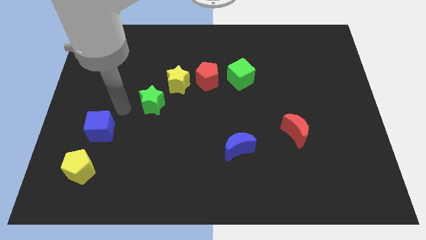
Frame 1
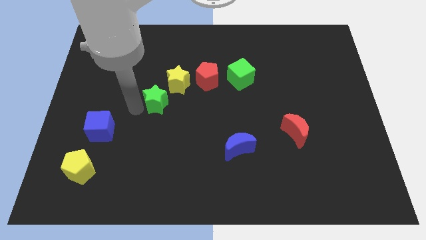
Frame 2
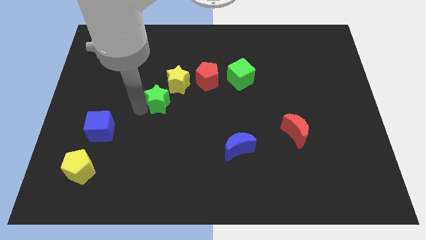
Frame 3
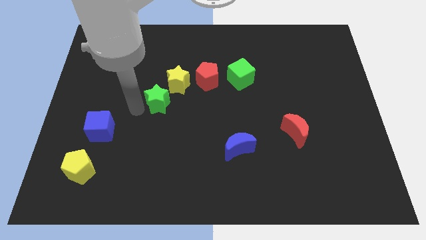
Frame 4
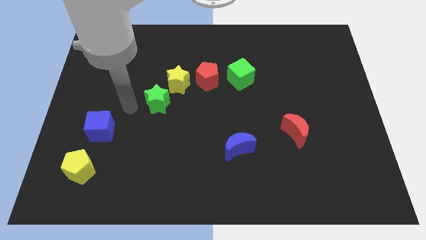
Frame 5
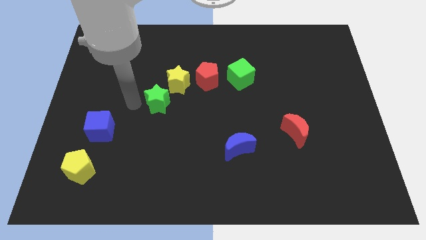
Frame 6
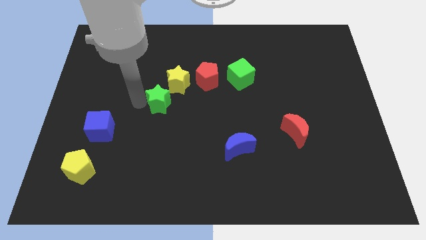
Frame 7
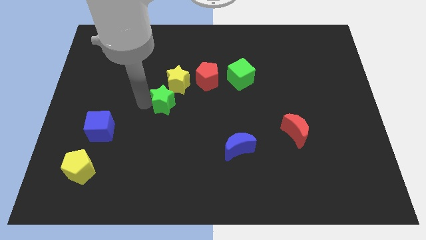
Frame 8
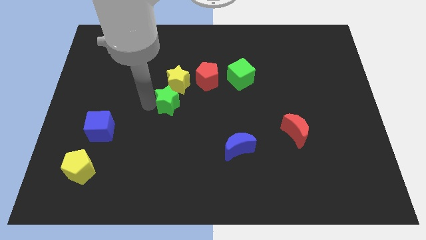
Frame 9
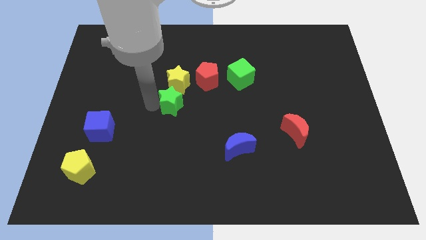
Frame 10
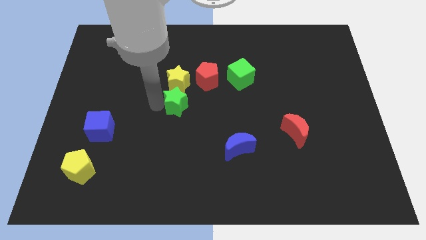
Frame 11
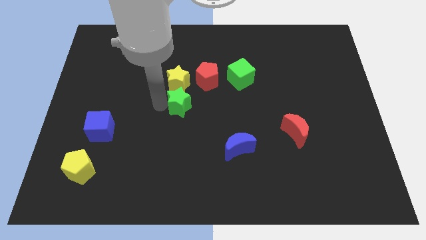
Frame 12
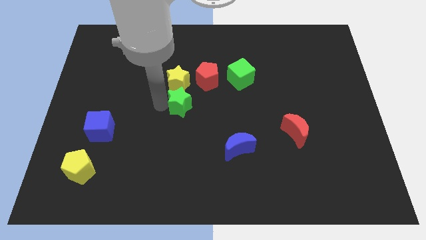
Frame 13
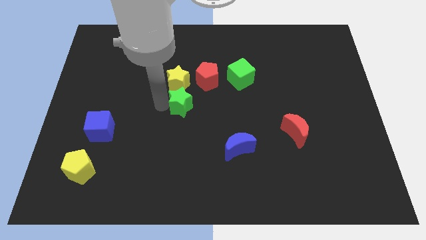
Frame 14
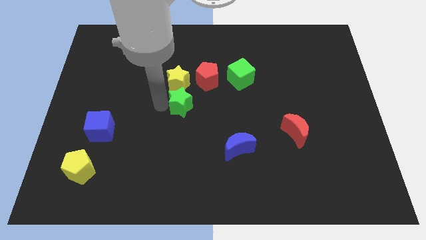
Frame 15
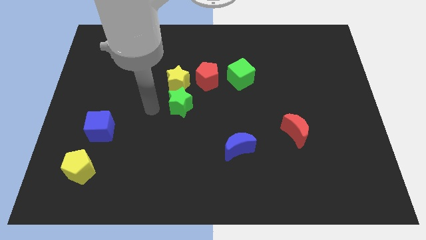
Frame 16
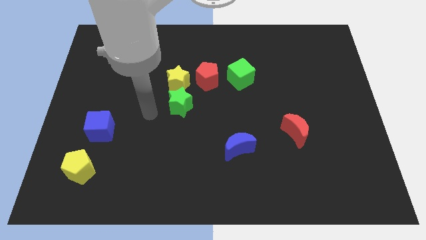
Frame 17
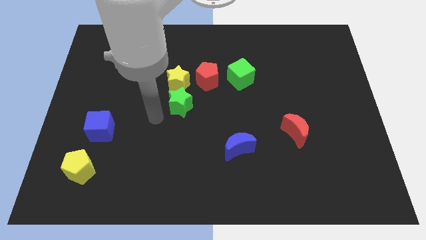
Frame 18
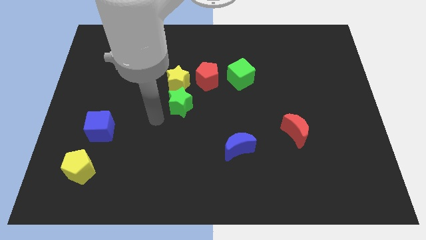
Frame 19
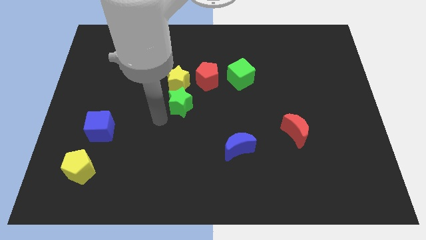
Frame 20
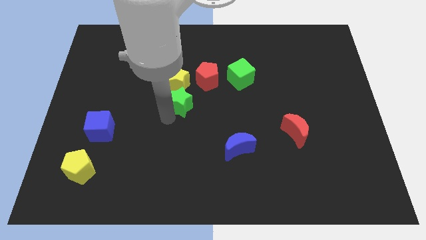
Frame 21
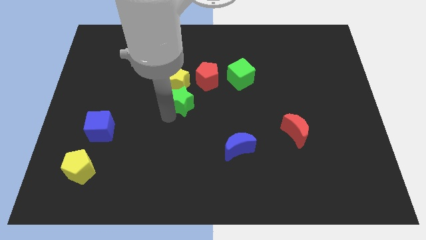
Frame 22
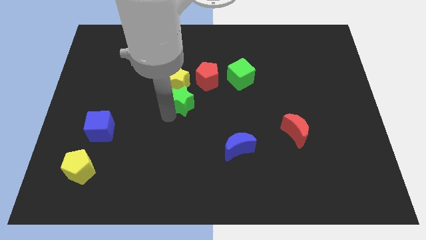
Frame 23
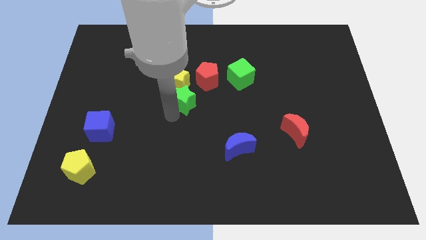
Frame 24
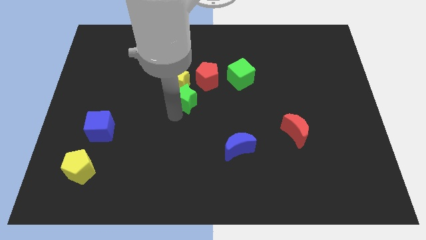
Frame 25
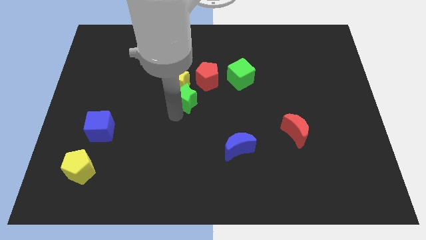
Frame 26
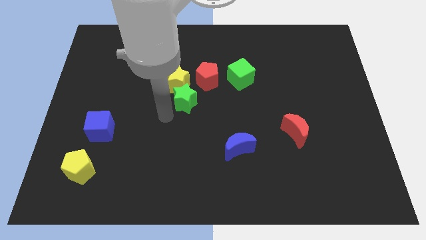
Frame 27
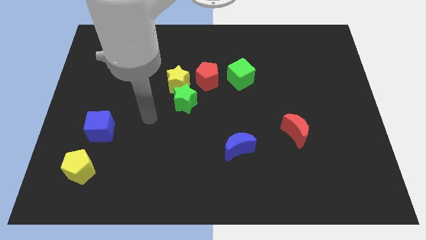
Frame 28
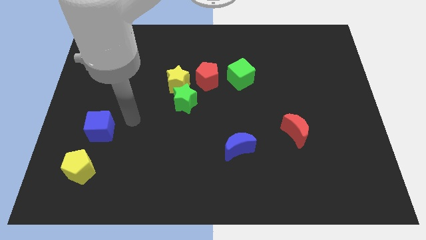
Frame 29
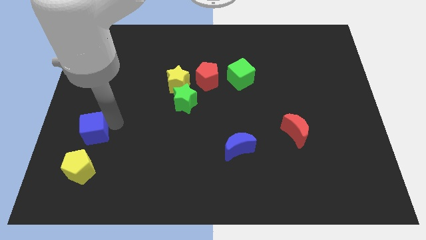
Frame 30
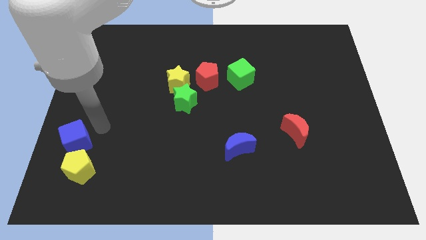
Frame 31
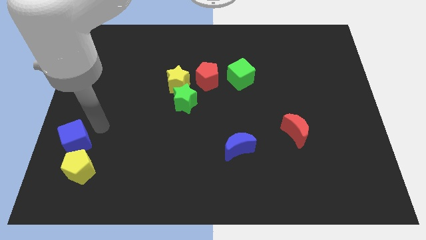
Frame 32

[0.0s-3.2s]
place the green star at the bottom right of the yellow star

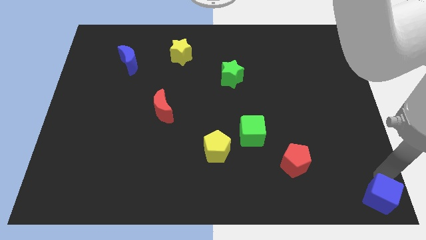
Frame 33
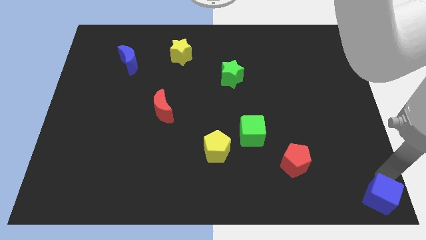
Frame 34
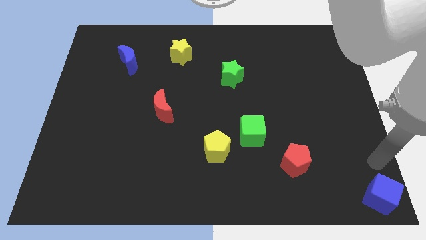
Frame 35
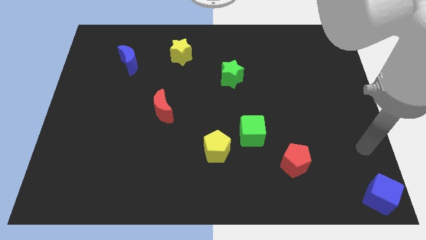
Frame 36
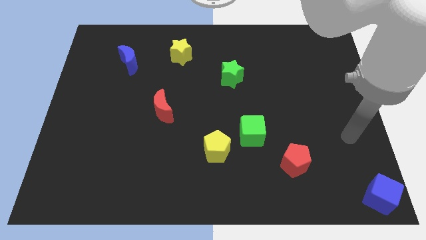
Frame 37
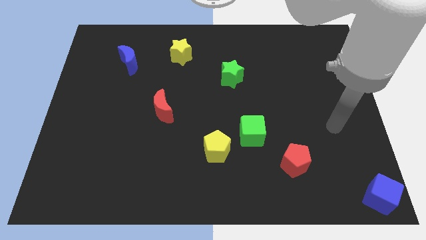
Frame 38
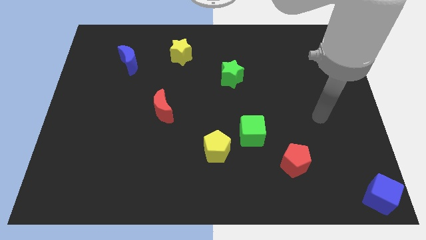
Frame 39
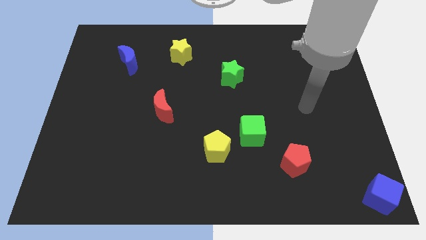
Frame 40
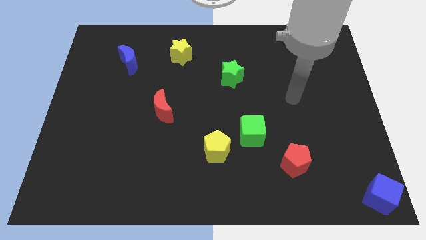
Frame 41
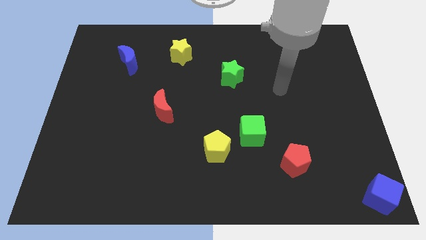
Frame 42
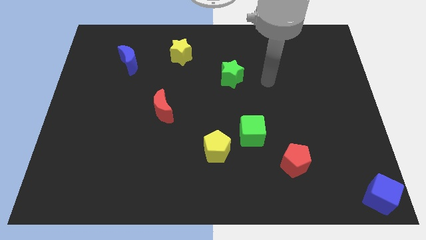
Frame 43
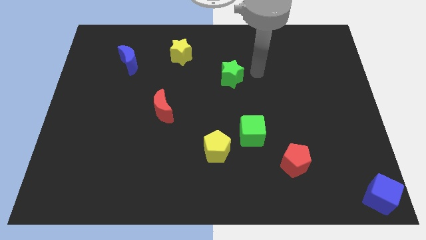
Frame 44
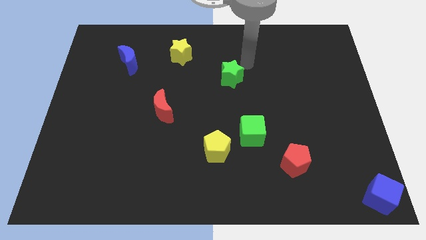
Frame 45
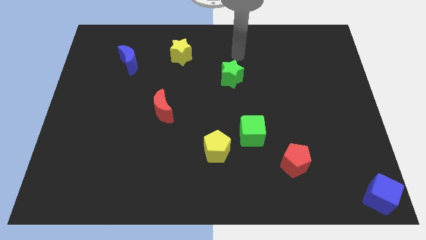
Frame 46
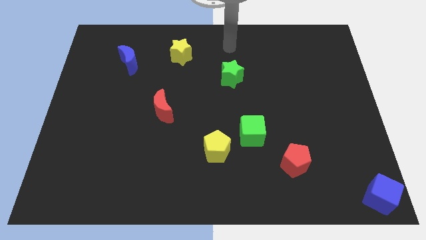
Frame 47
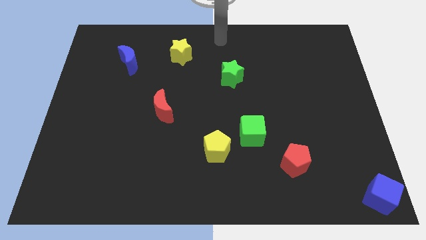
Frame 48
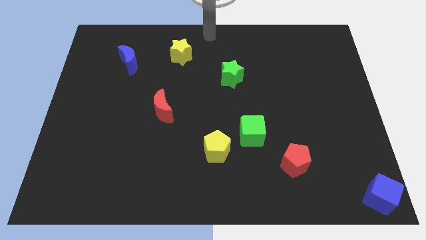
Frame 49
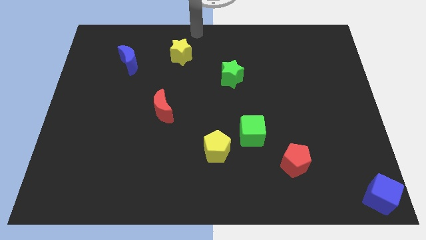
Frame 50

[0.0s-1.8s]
move the arm away from the blue cube

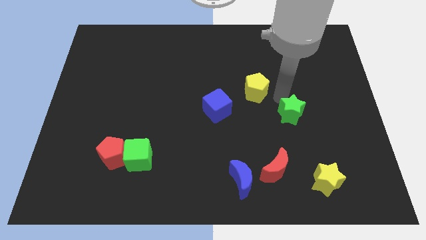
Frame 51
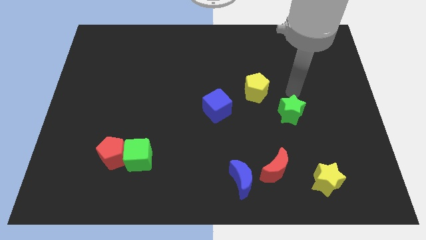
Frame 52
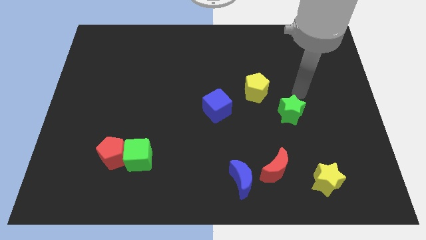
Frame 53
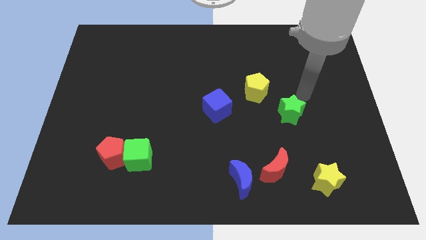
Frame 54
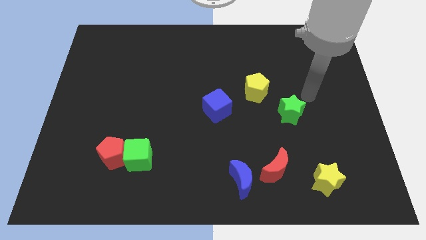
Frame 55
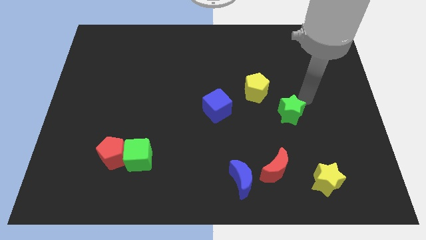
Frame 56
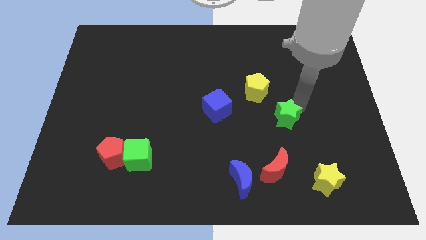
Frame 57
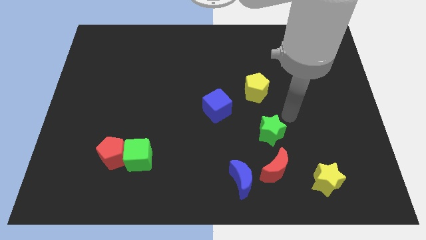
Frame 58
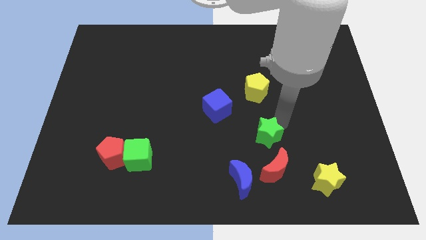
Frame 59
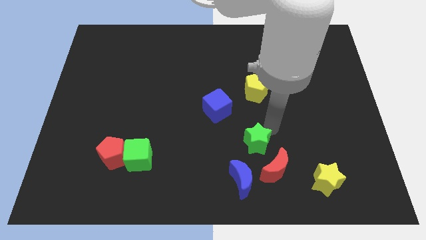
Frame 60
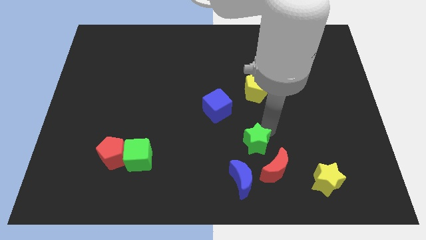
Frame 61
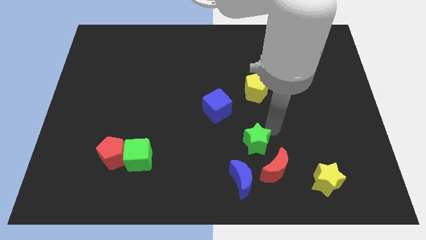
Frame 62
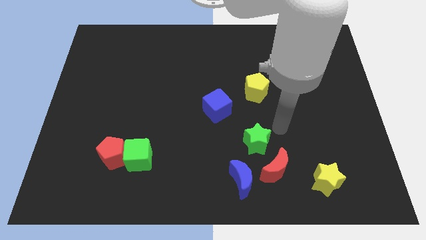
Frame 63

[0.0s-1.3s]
place the green star underneath the yellow pentagon

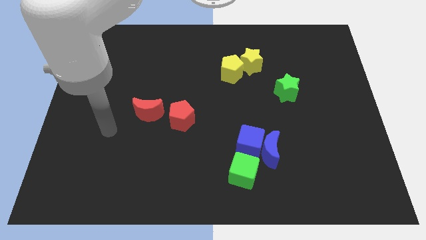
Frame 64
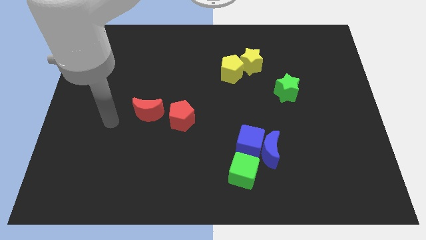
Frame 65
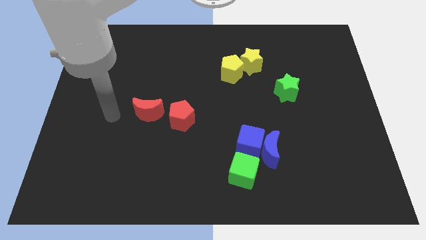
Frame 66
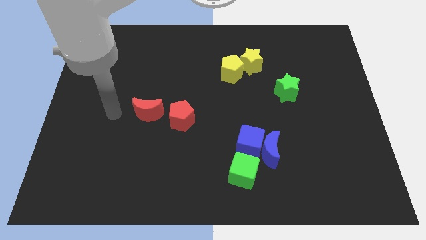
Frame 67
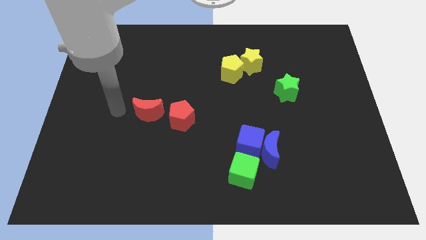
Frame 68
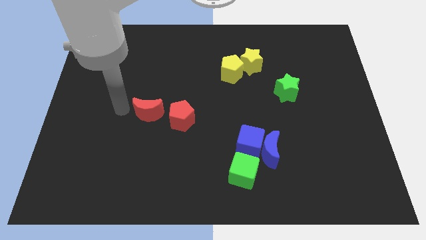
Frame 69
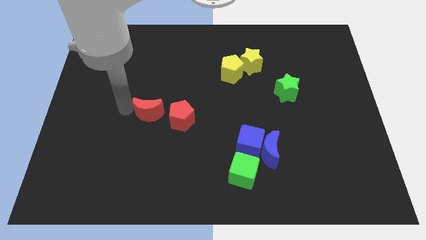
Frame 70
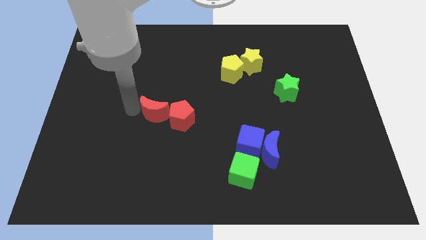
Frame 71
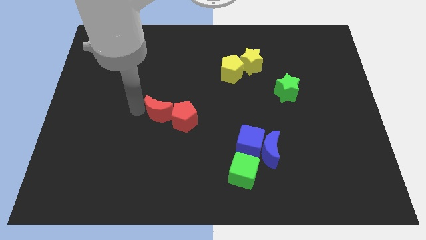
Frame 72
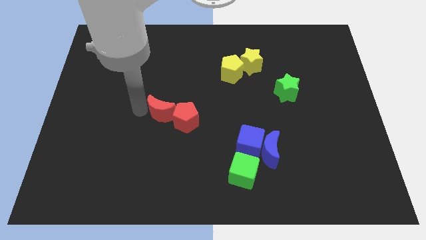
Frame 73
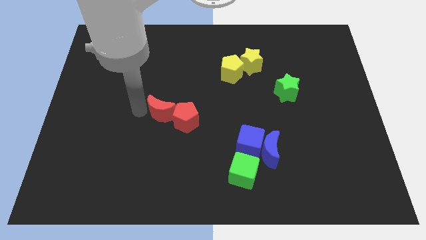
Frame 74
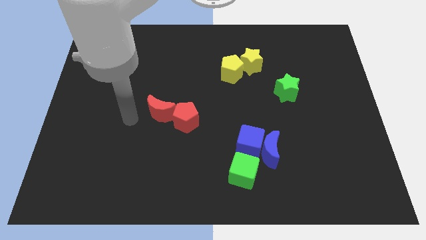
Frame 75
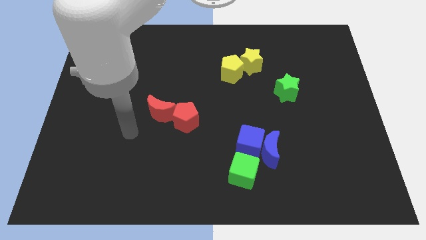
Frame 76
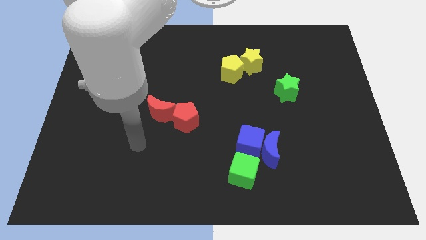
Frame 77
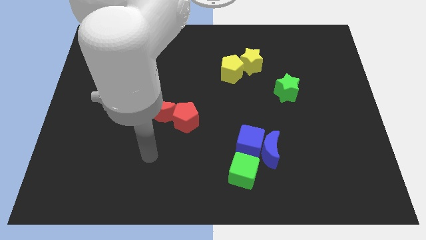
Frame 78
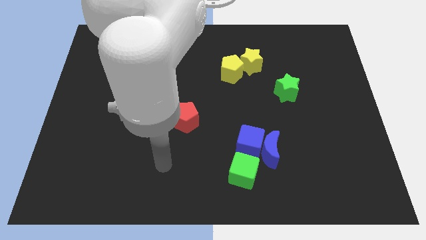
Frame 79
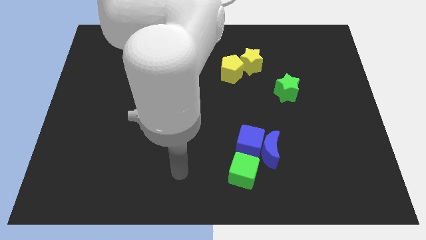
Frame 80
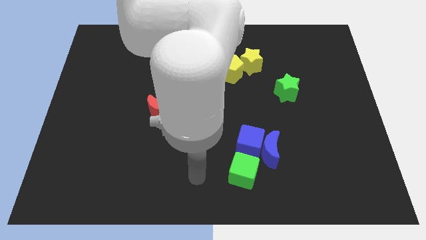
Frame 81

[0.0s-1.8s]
move the red moon into red pentagon

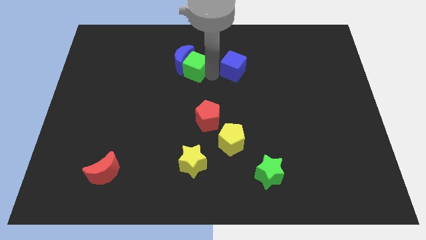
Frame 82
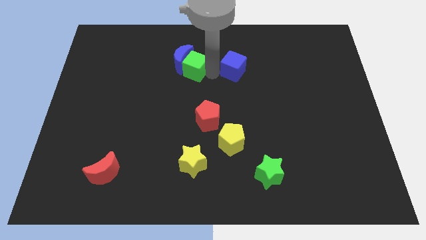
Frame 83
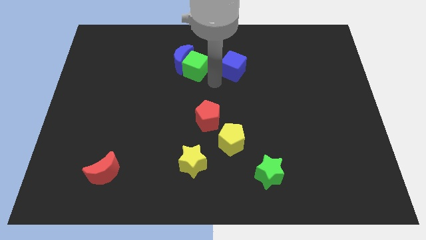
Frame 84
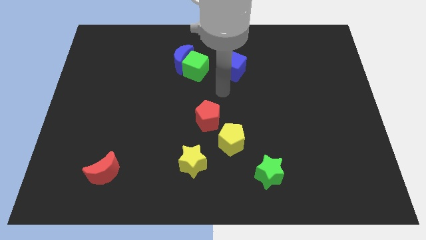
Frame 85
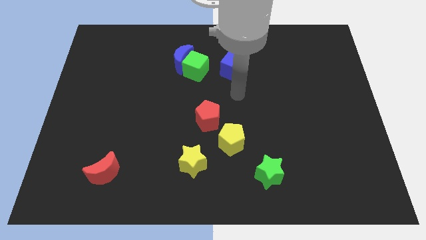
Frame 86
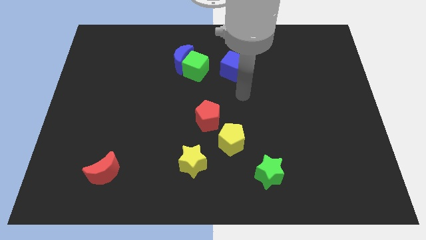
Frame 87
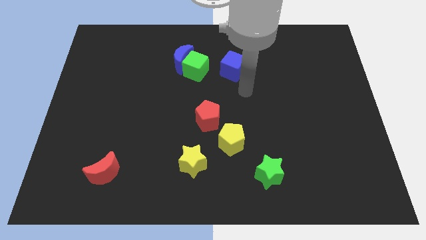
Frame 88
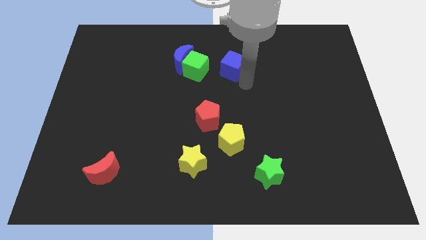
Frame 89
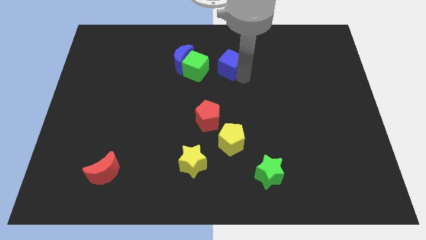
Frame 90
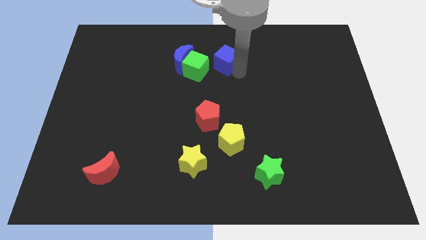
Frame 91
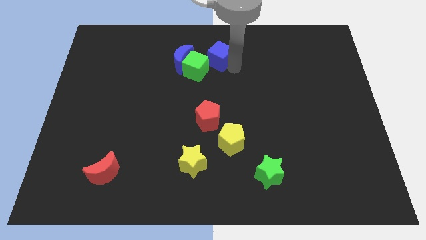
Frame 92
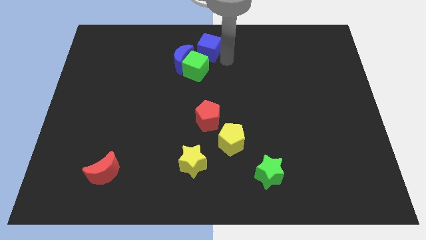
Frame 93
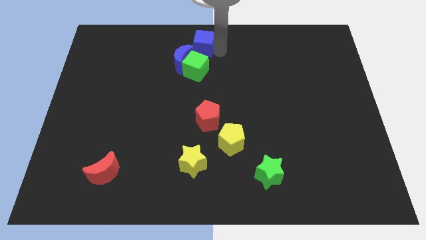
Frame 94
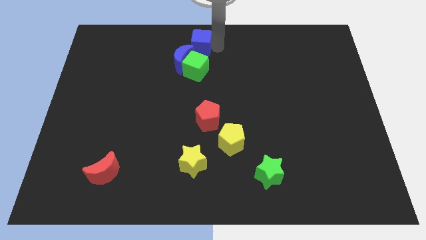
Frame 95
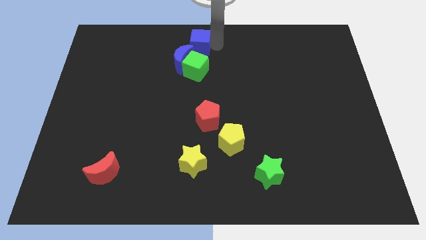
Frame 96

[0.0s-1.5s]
place the blue cube above the blue moon
